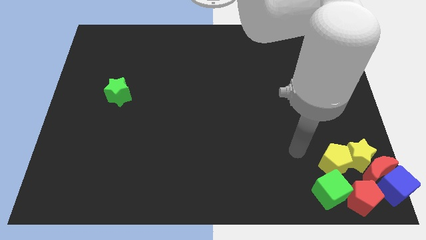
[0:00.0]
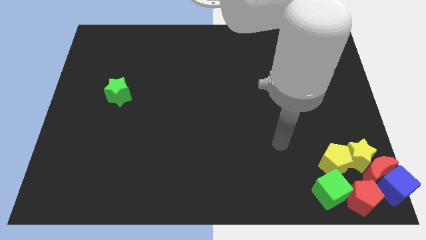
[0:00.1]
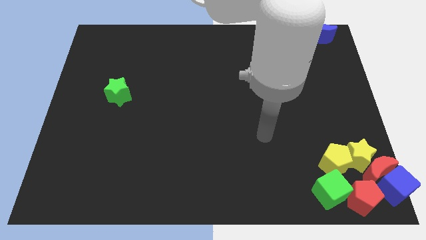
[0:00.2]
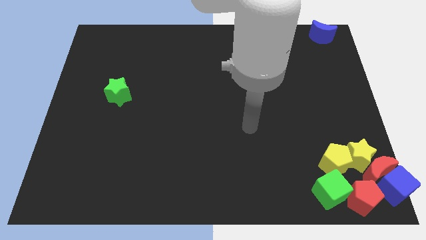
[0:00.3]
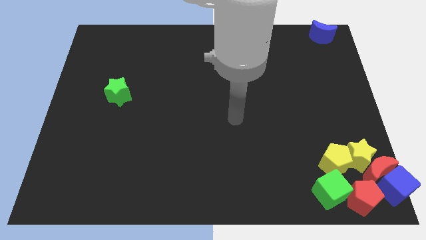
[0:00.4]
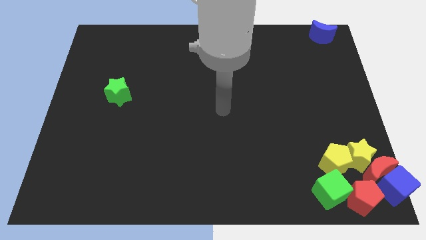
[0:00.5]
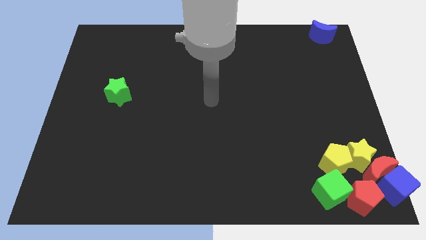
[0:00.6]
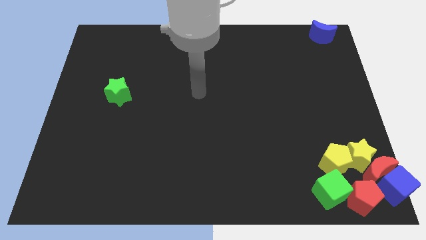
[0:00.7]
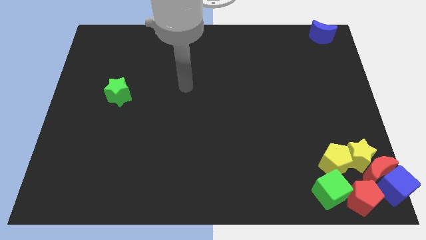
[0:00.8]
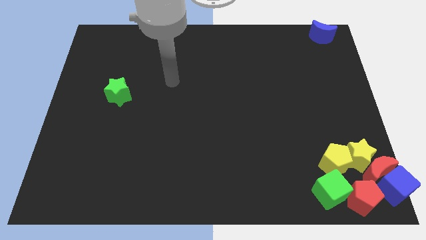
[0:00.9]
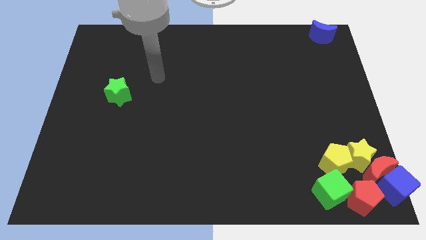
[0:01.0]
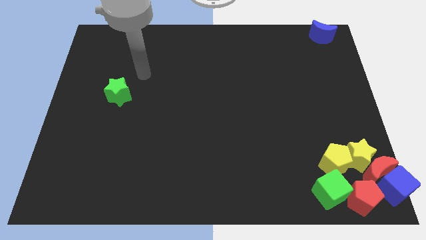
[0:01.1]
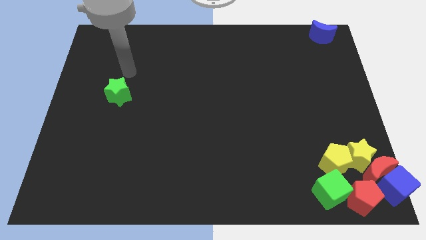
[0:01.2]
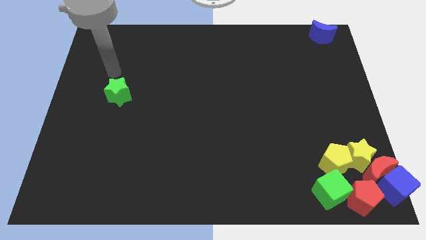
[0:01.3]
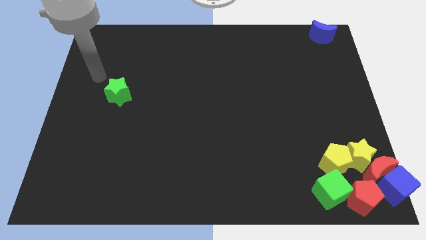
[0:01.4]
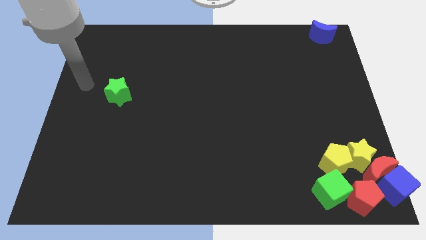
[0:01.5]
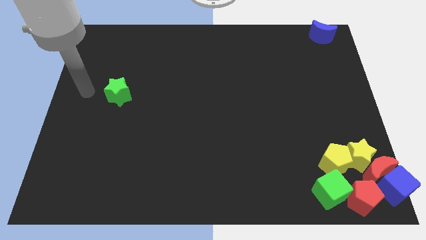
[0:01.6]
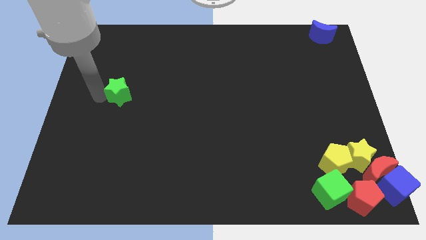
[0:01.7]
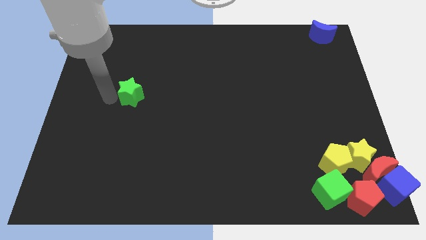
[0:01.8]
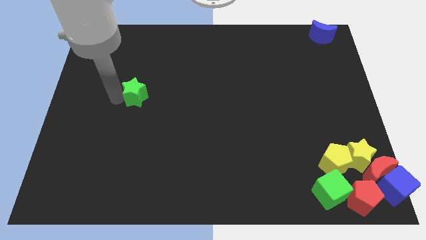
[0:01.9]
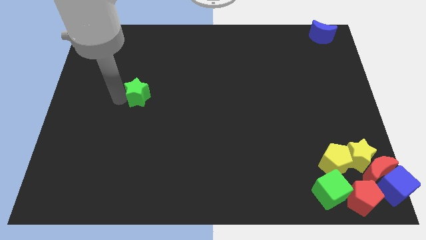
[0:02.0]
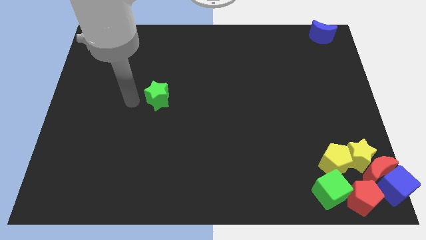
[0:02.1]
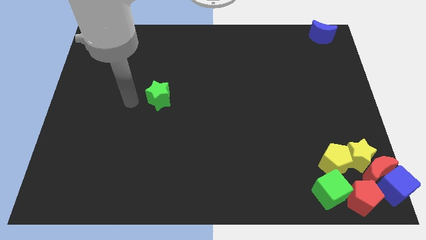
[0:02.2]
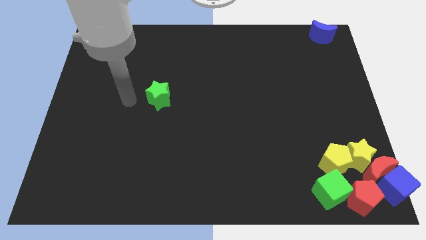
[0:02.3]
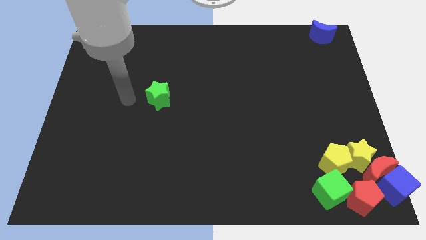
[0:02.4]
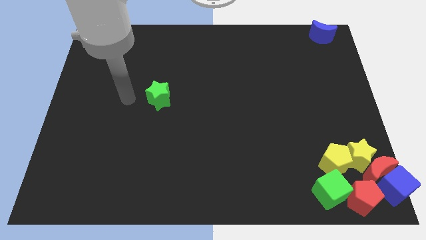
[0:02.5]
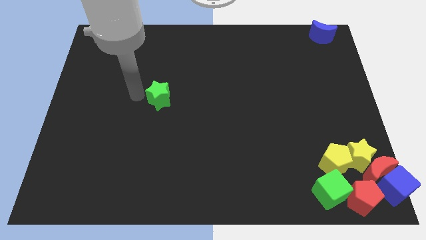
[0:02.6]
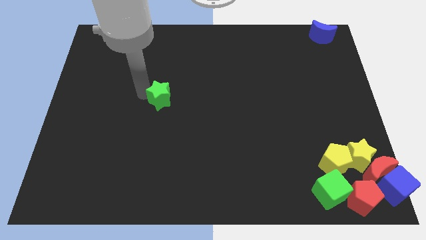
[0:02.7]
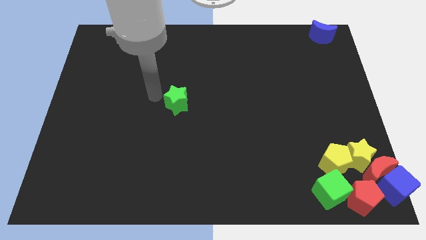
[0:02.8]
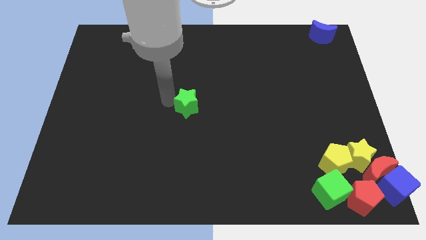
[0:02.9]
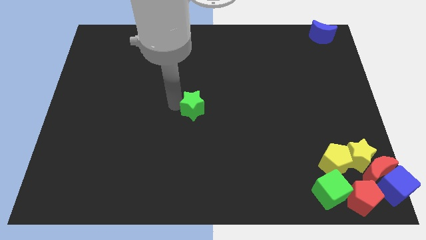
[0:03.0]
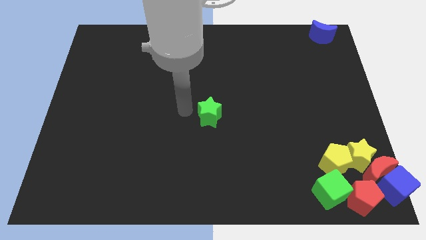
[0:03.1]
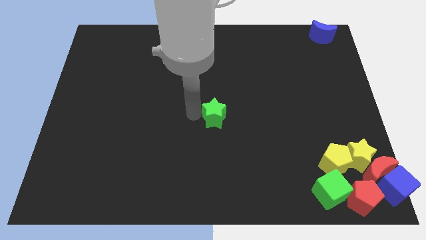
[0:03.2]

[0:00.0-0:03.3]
drag the green star to the center of the board

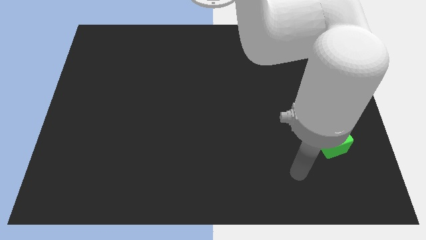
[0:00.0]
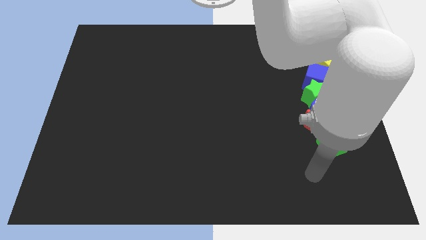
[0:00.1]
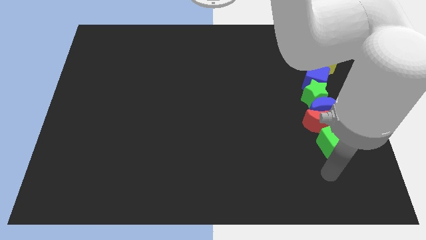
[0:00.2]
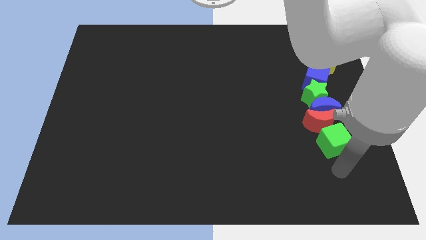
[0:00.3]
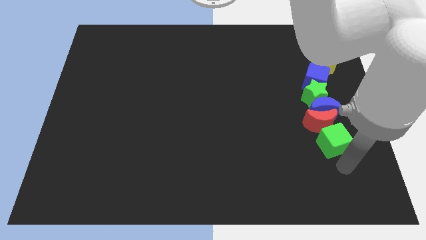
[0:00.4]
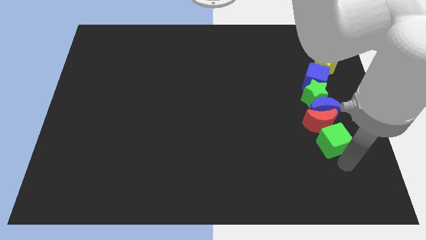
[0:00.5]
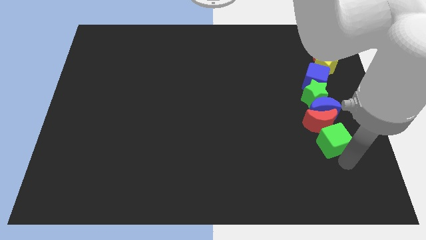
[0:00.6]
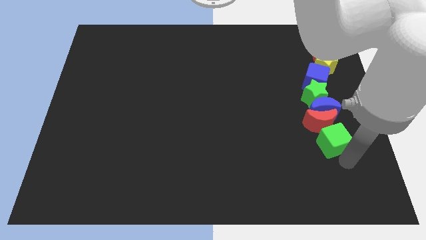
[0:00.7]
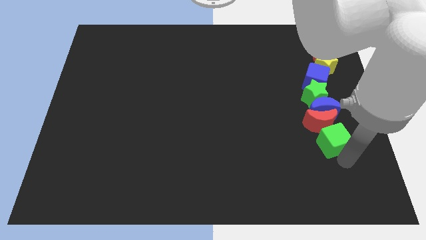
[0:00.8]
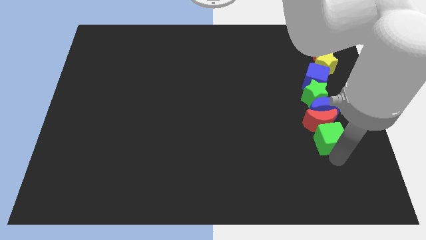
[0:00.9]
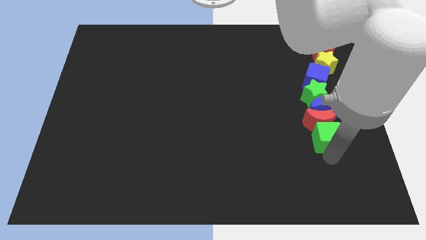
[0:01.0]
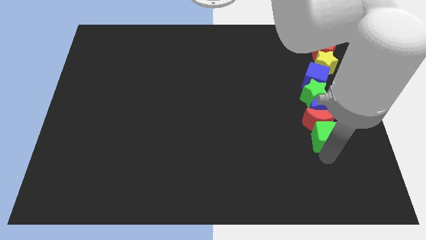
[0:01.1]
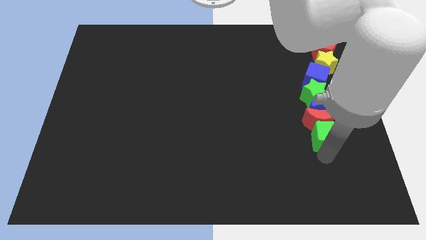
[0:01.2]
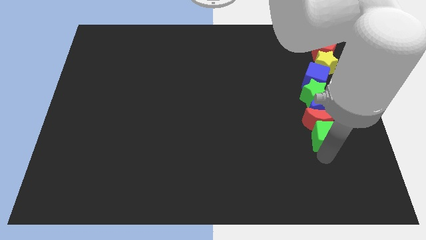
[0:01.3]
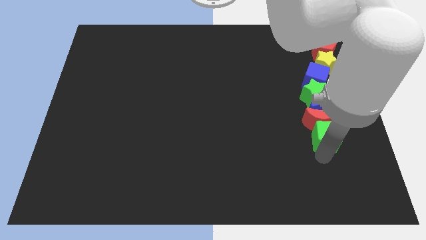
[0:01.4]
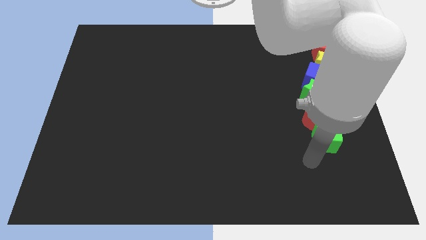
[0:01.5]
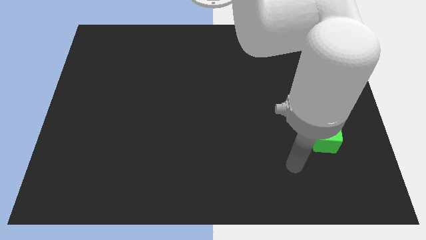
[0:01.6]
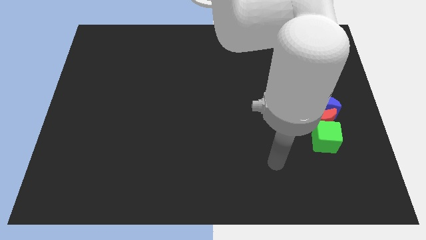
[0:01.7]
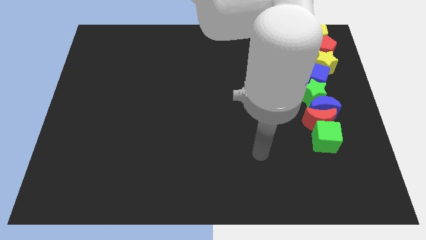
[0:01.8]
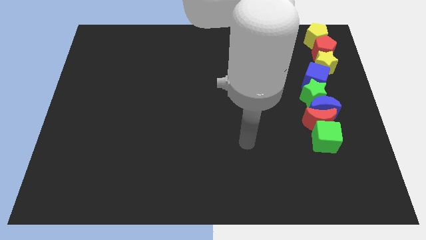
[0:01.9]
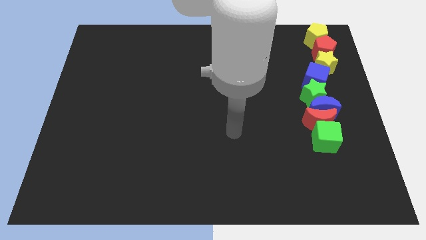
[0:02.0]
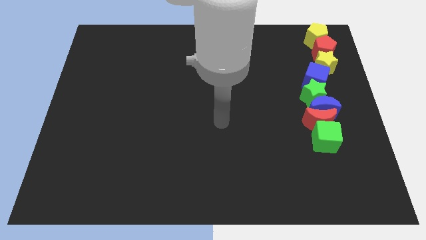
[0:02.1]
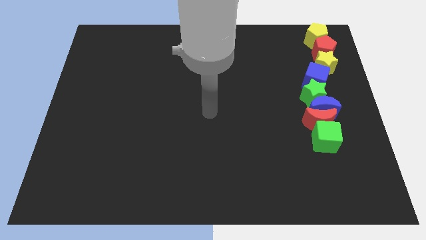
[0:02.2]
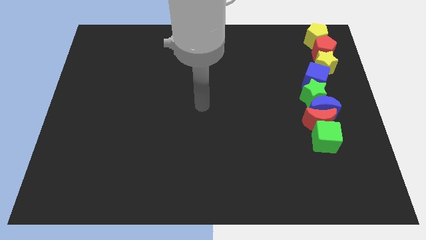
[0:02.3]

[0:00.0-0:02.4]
push the green cube towards the bottom of the red crescent

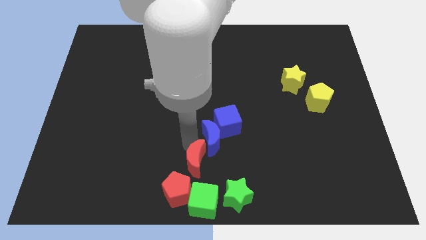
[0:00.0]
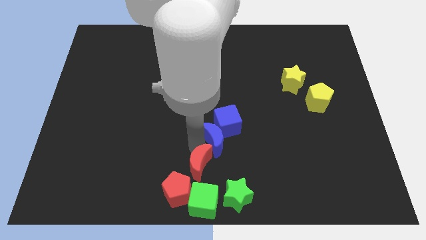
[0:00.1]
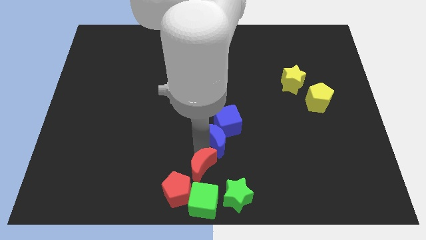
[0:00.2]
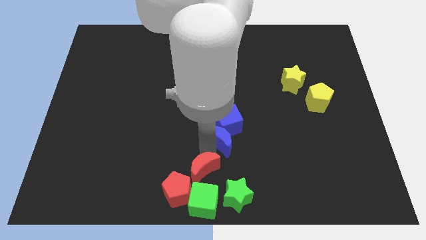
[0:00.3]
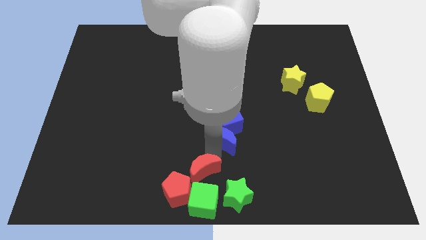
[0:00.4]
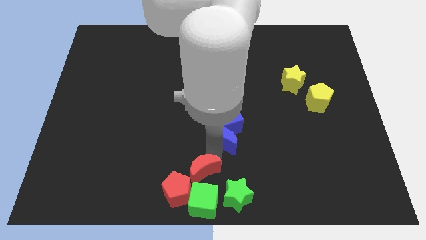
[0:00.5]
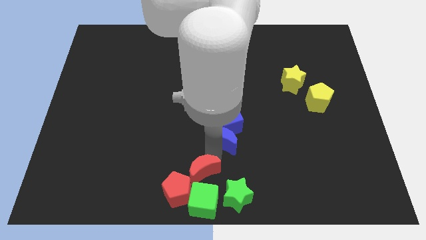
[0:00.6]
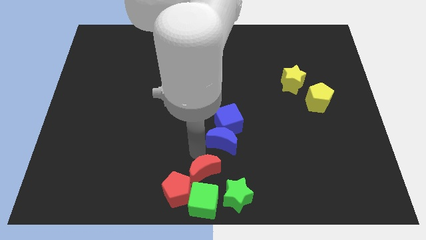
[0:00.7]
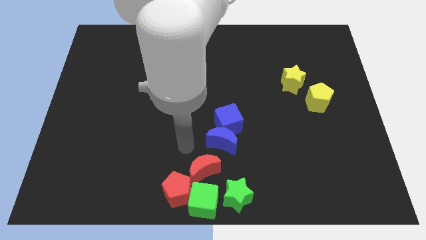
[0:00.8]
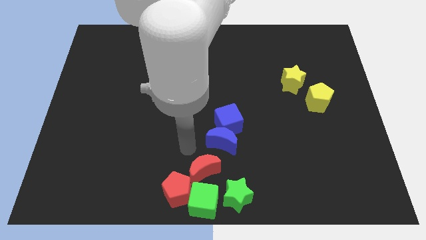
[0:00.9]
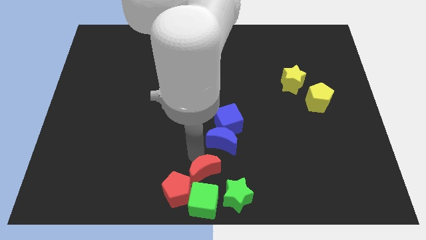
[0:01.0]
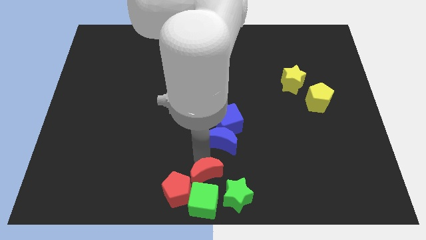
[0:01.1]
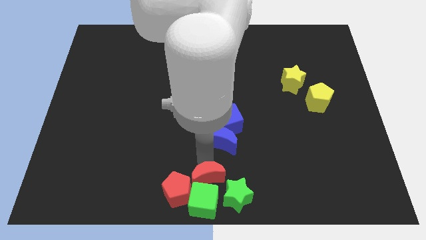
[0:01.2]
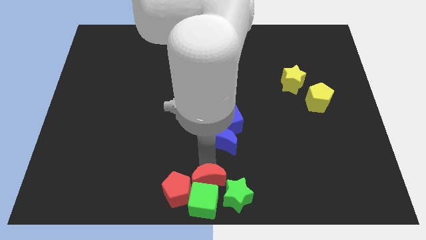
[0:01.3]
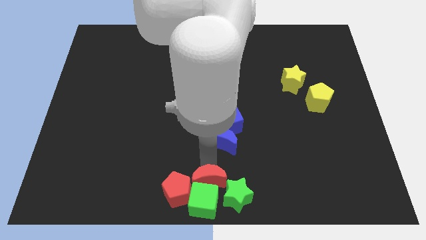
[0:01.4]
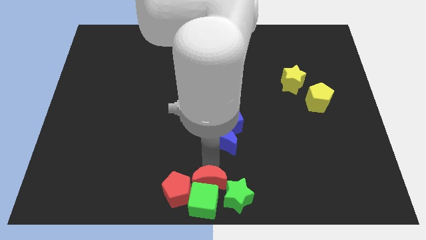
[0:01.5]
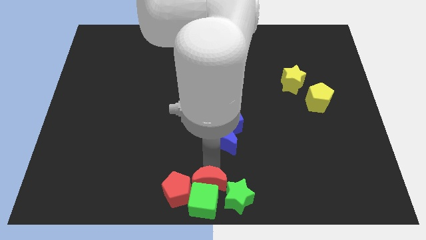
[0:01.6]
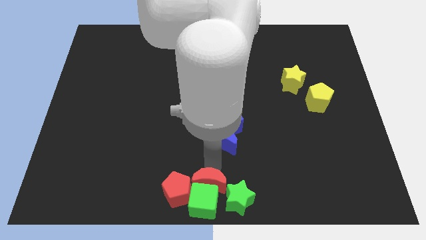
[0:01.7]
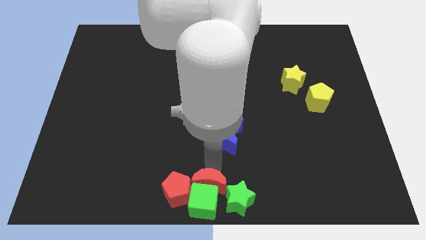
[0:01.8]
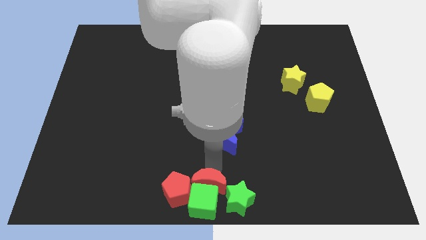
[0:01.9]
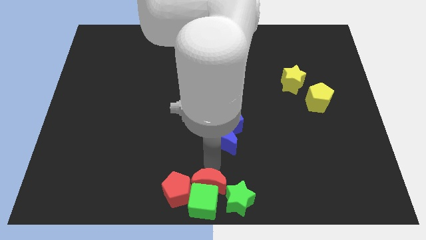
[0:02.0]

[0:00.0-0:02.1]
push the red crescent into the green cube

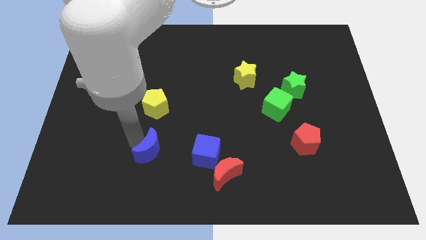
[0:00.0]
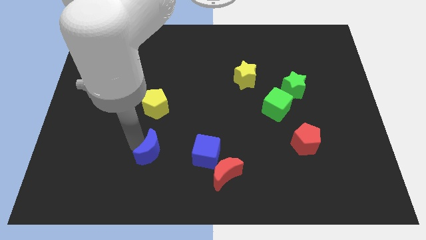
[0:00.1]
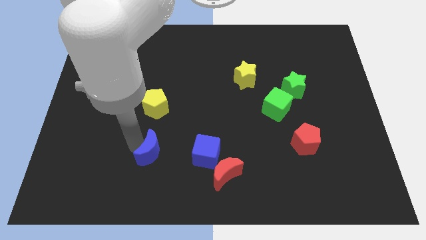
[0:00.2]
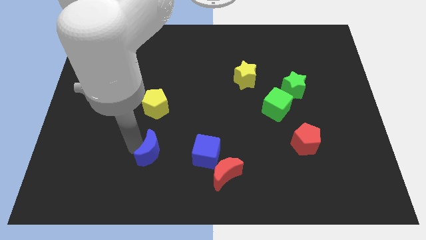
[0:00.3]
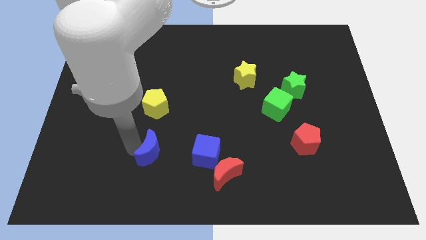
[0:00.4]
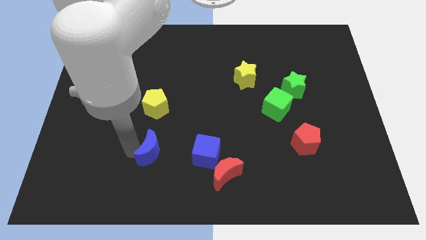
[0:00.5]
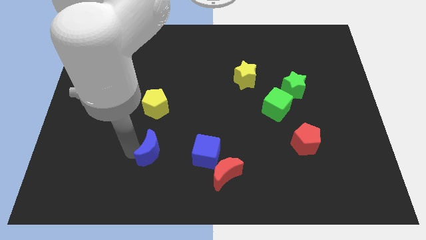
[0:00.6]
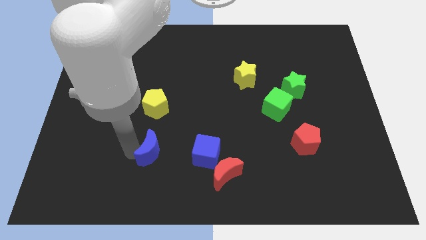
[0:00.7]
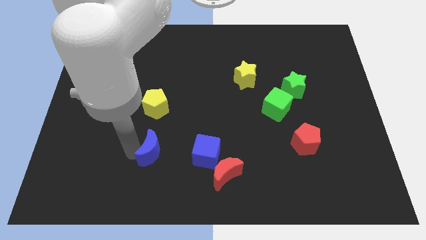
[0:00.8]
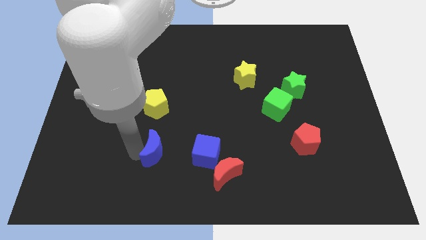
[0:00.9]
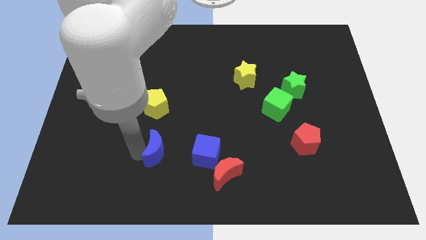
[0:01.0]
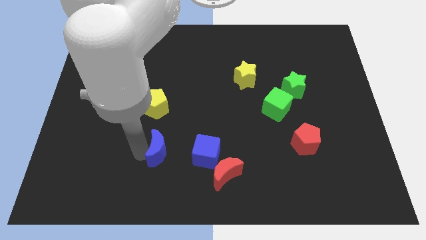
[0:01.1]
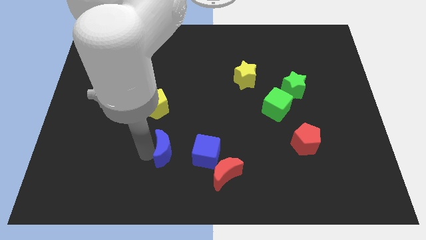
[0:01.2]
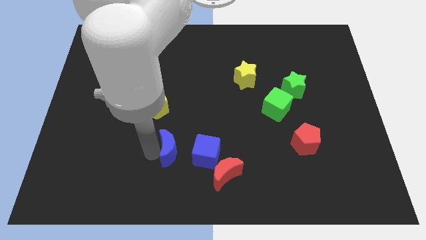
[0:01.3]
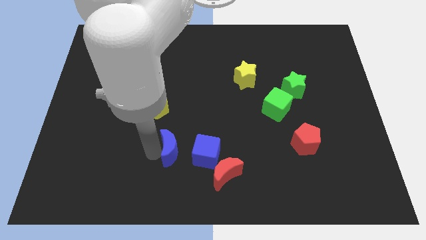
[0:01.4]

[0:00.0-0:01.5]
place blue cube parallel left to blue cube
